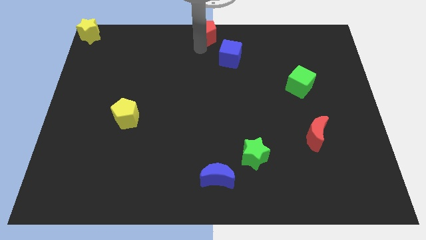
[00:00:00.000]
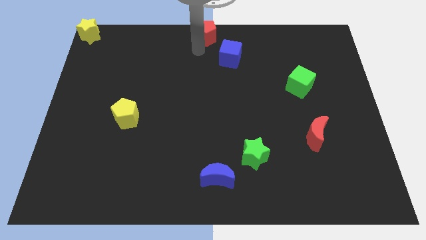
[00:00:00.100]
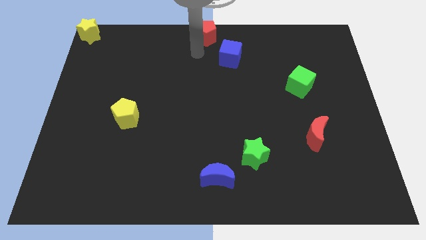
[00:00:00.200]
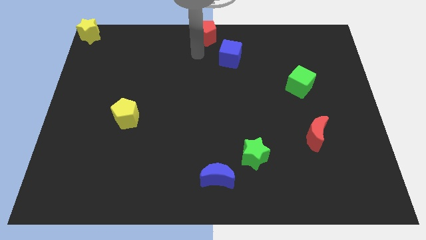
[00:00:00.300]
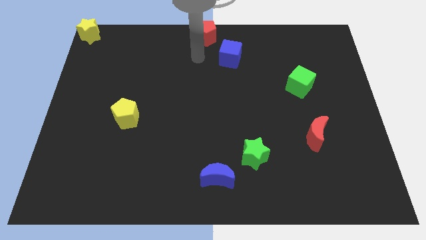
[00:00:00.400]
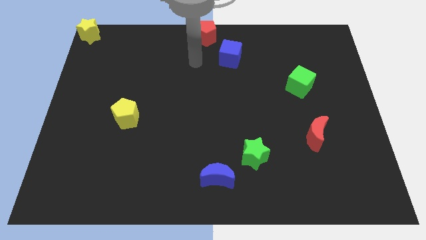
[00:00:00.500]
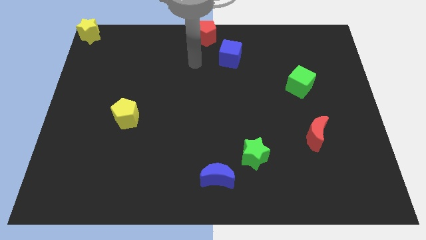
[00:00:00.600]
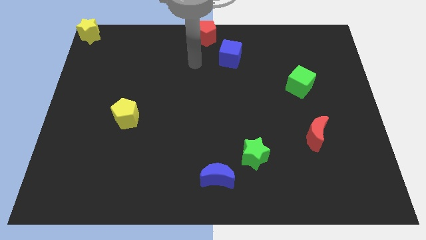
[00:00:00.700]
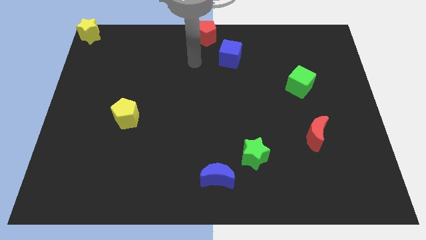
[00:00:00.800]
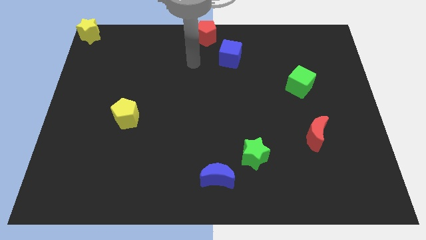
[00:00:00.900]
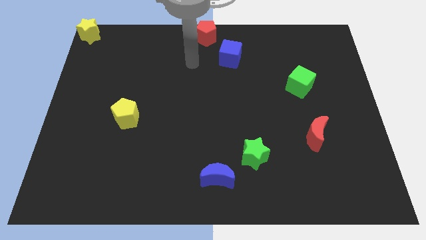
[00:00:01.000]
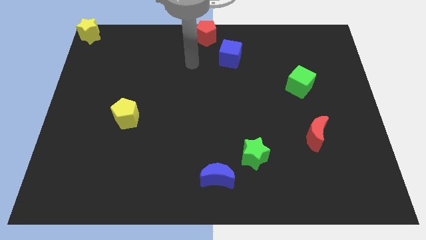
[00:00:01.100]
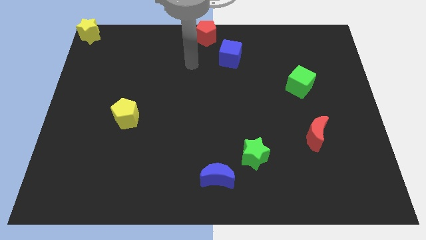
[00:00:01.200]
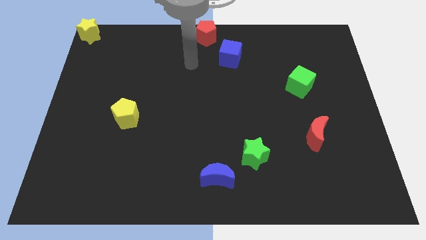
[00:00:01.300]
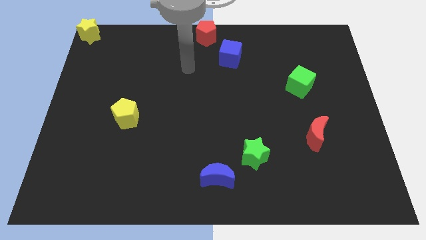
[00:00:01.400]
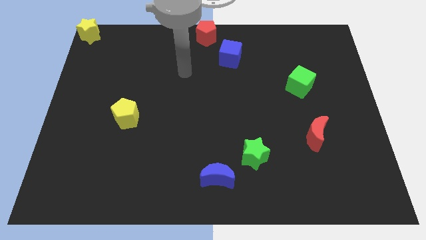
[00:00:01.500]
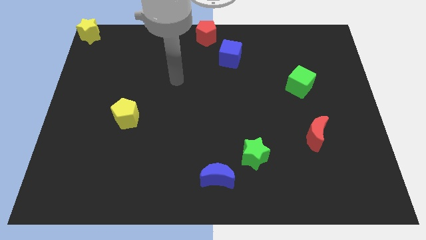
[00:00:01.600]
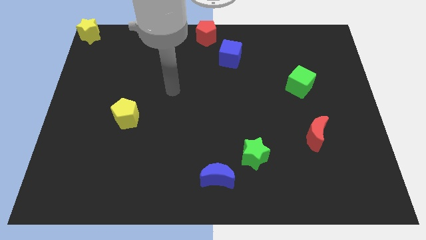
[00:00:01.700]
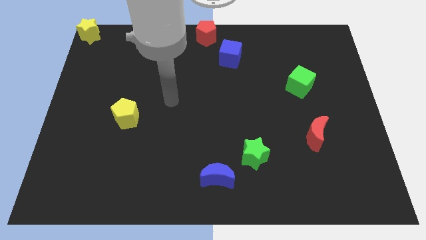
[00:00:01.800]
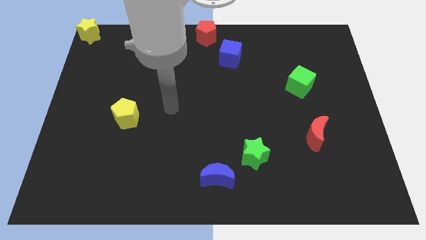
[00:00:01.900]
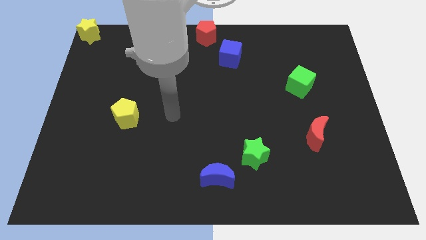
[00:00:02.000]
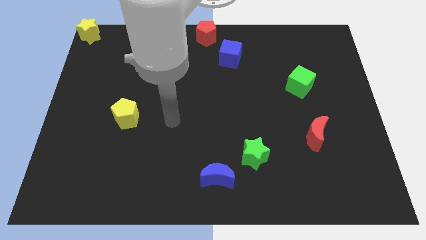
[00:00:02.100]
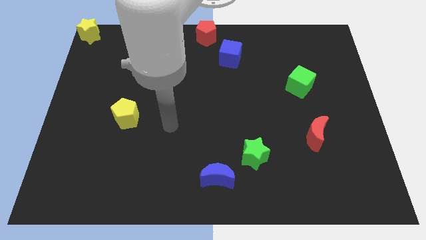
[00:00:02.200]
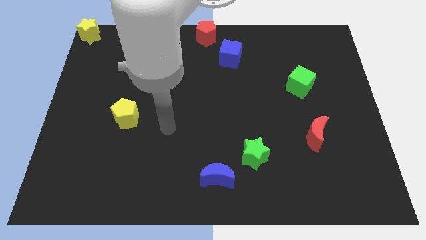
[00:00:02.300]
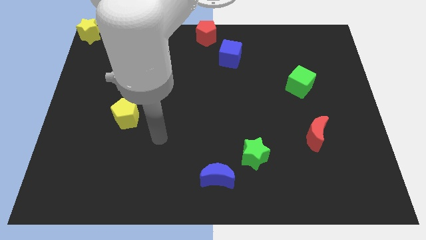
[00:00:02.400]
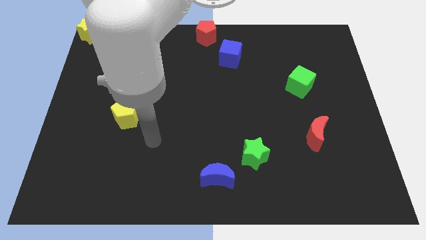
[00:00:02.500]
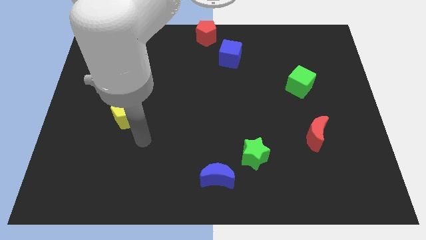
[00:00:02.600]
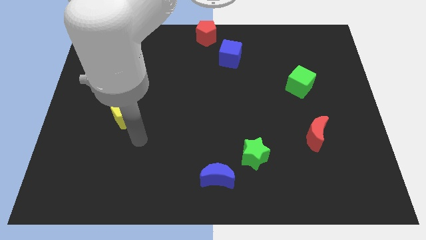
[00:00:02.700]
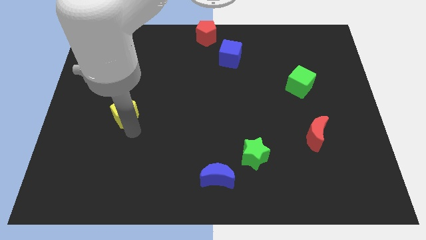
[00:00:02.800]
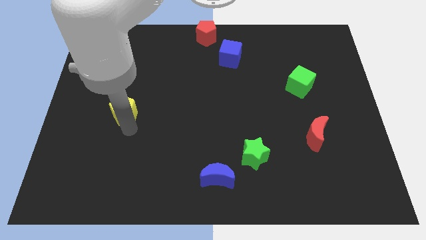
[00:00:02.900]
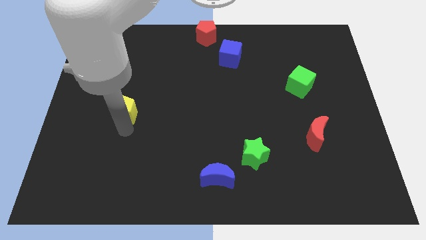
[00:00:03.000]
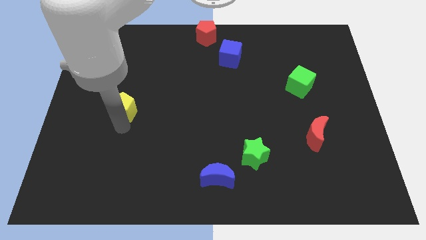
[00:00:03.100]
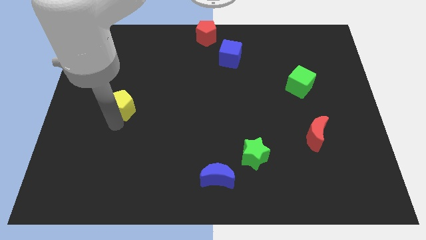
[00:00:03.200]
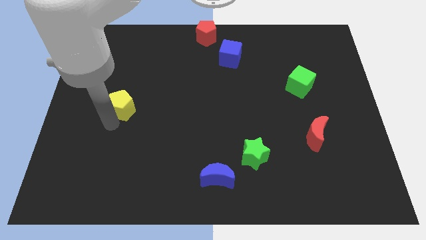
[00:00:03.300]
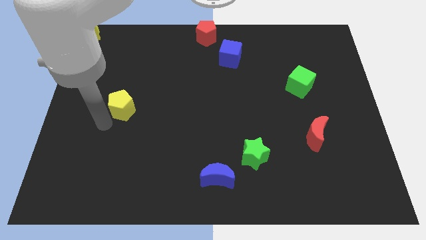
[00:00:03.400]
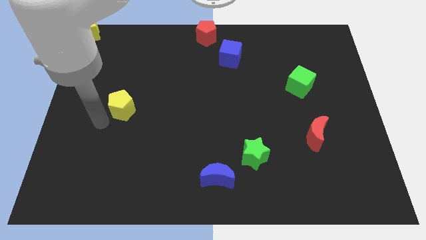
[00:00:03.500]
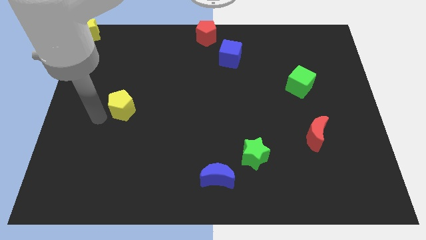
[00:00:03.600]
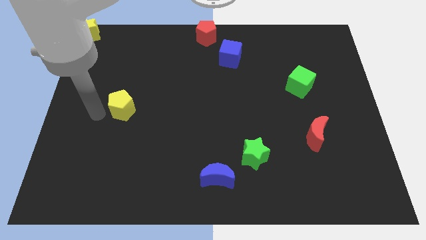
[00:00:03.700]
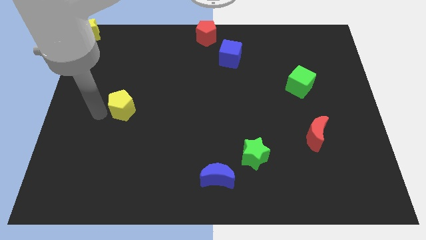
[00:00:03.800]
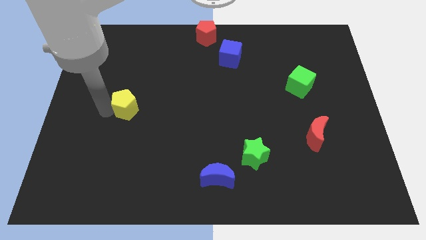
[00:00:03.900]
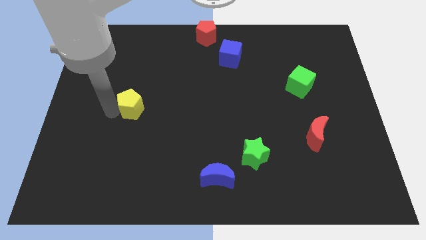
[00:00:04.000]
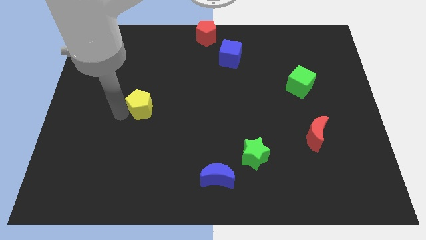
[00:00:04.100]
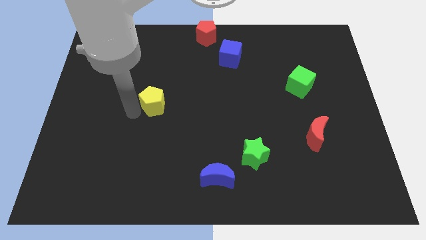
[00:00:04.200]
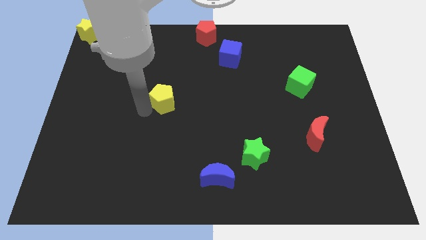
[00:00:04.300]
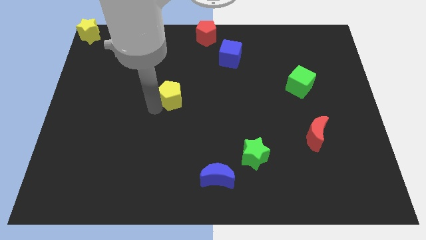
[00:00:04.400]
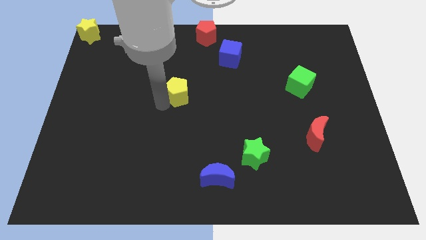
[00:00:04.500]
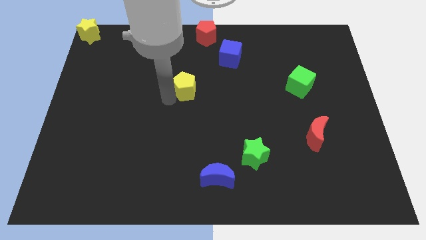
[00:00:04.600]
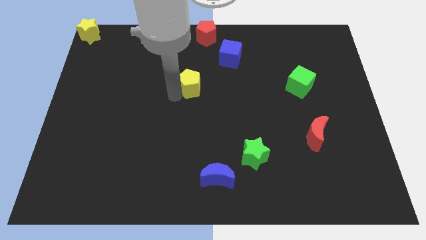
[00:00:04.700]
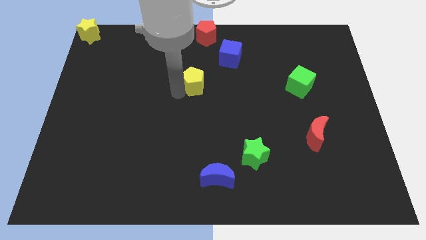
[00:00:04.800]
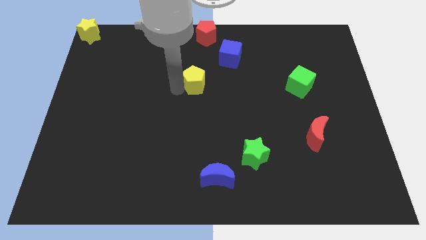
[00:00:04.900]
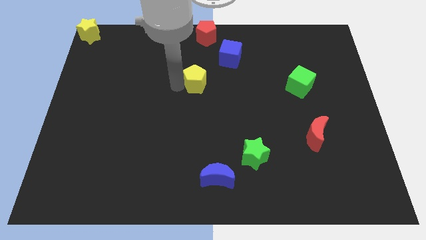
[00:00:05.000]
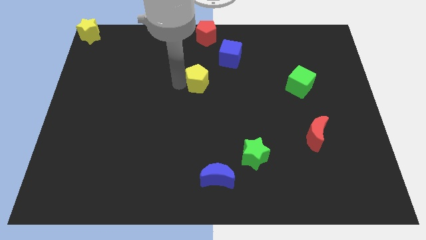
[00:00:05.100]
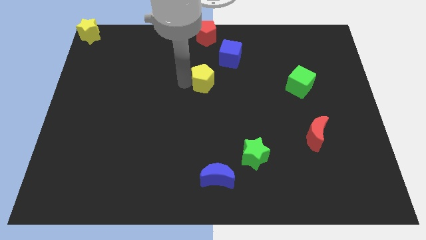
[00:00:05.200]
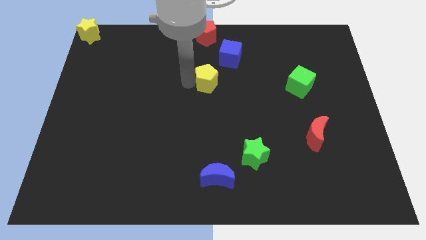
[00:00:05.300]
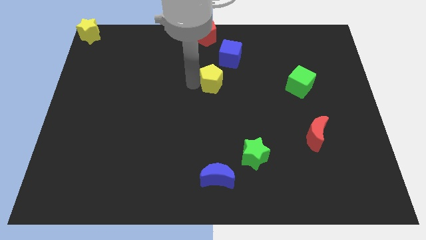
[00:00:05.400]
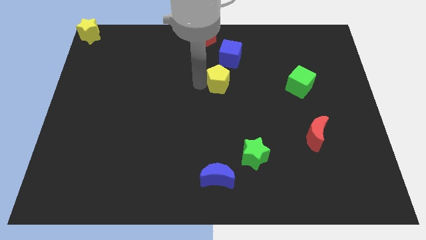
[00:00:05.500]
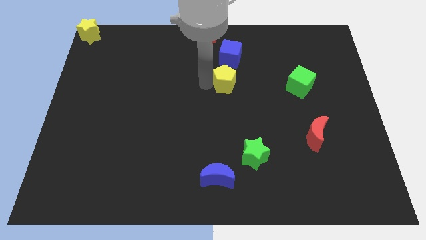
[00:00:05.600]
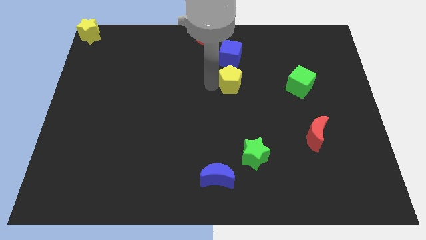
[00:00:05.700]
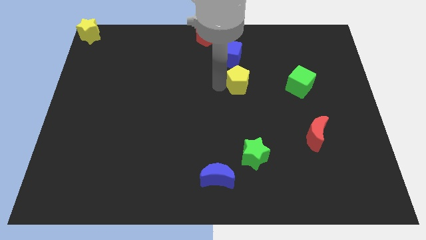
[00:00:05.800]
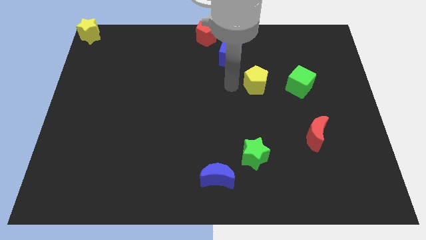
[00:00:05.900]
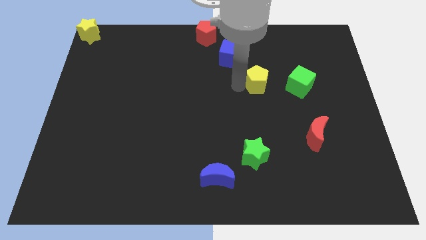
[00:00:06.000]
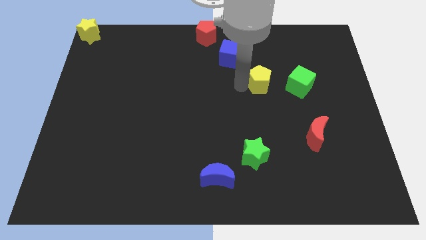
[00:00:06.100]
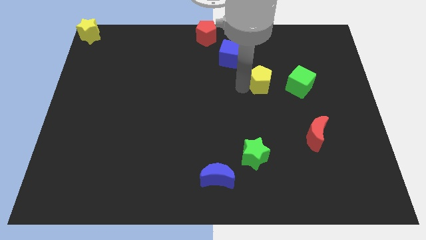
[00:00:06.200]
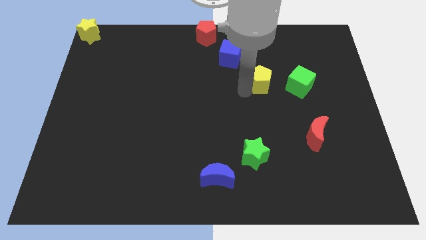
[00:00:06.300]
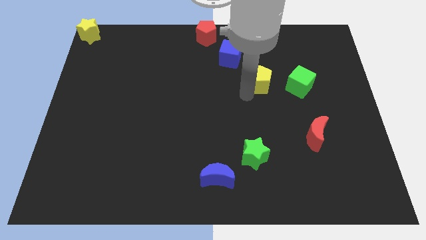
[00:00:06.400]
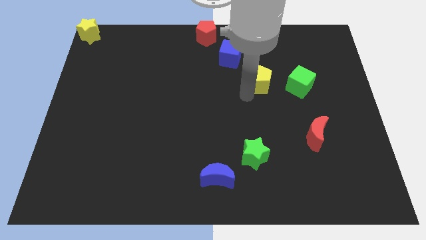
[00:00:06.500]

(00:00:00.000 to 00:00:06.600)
push the yellow pentagon to the right

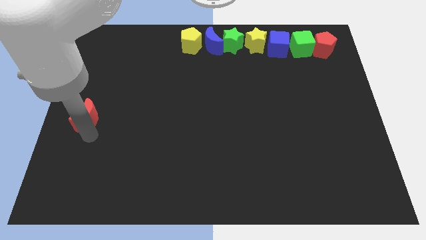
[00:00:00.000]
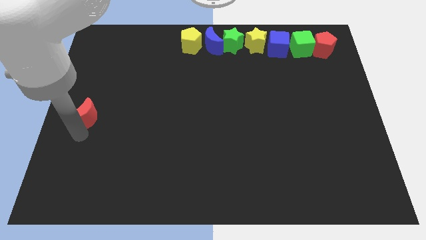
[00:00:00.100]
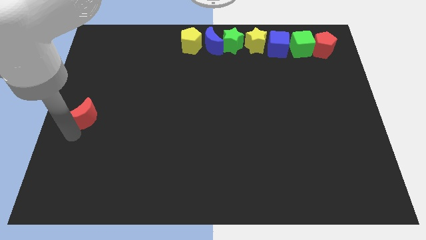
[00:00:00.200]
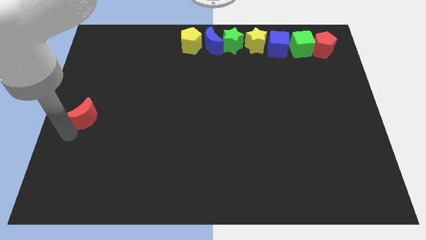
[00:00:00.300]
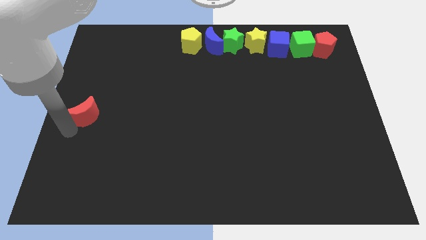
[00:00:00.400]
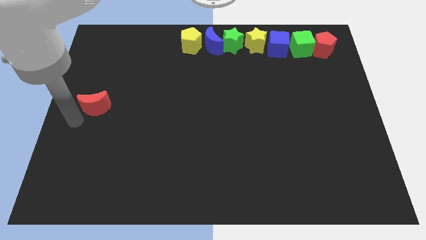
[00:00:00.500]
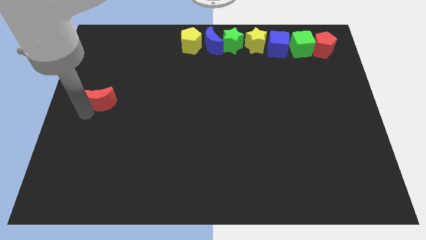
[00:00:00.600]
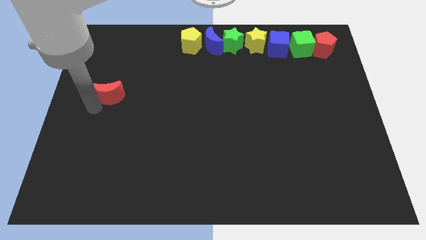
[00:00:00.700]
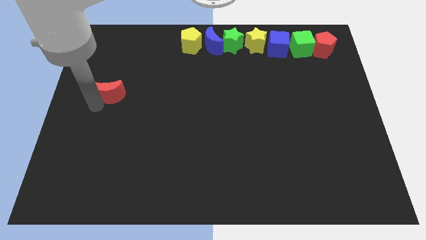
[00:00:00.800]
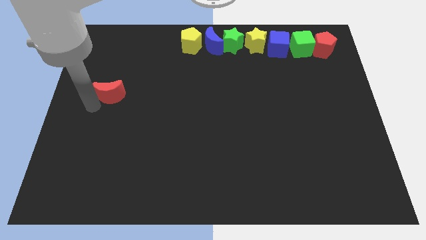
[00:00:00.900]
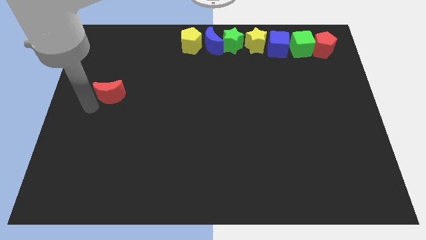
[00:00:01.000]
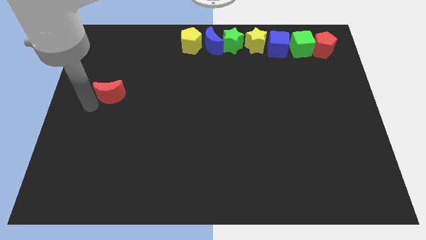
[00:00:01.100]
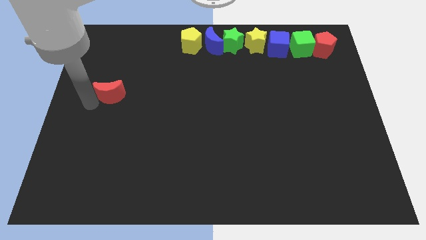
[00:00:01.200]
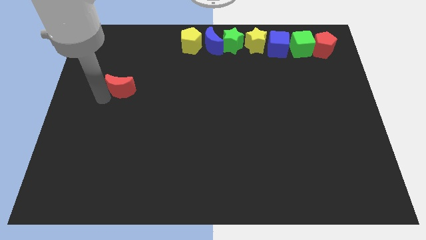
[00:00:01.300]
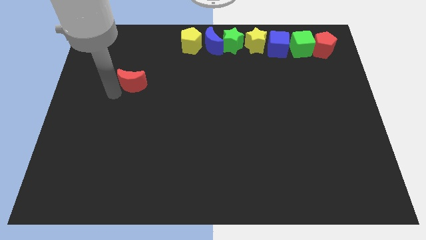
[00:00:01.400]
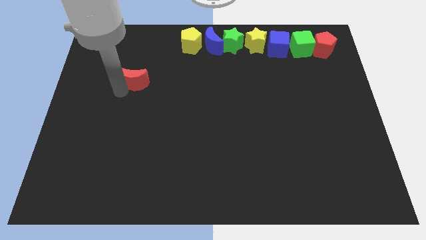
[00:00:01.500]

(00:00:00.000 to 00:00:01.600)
drag the red crescent towards the yellow pentagon

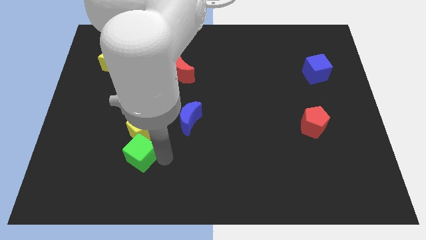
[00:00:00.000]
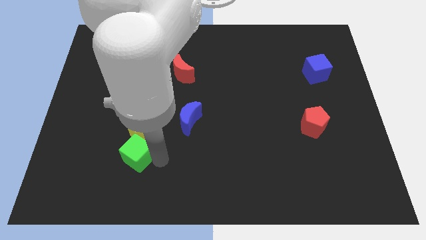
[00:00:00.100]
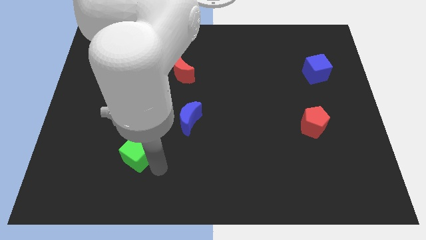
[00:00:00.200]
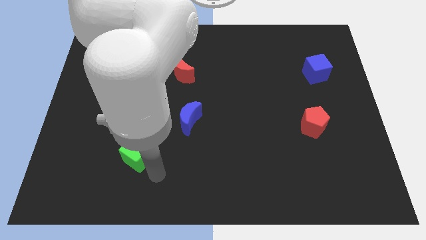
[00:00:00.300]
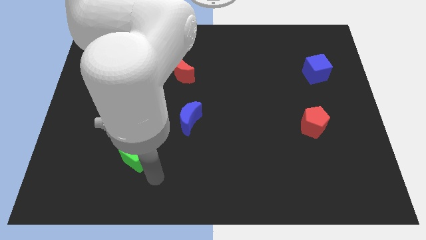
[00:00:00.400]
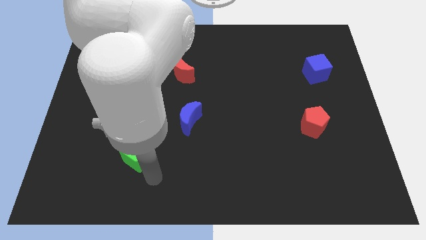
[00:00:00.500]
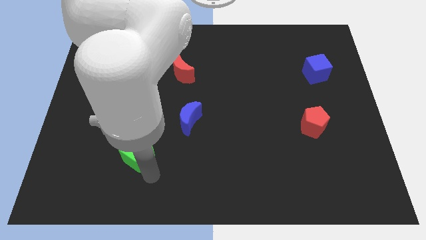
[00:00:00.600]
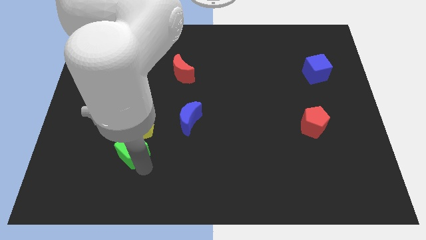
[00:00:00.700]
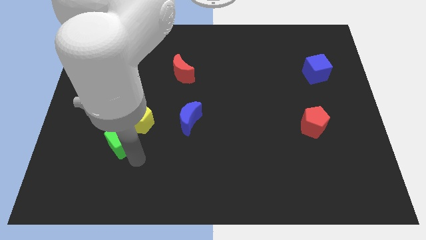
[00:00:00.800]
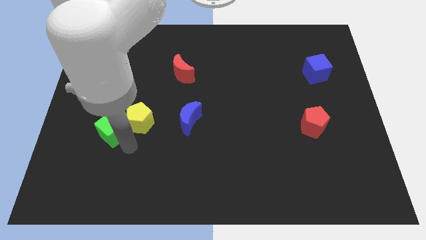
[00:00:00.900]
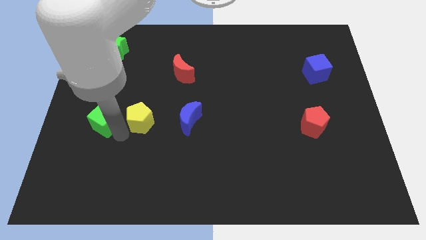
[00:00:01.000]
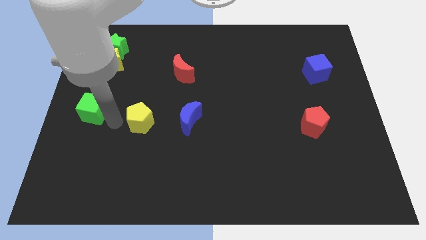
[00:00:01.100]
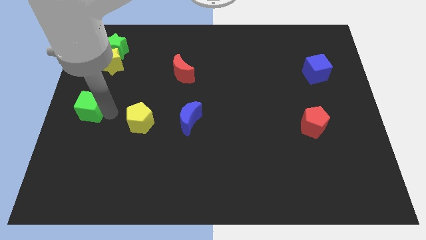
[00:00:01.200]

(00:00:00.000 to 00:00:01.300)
place the green cube vertically below the yellow star
